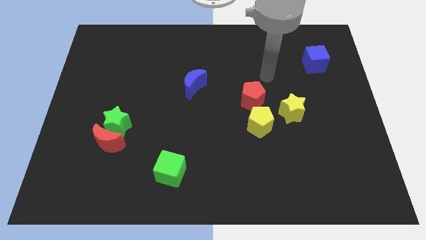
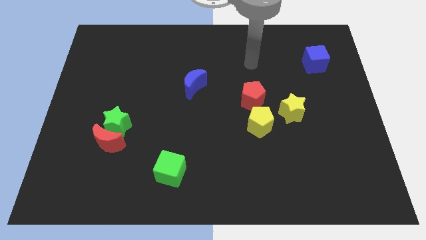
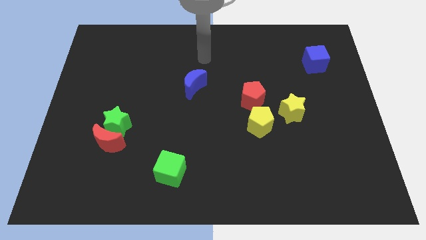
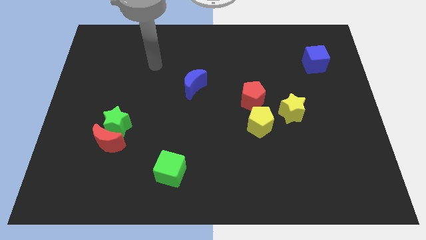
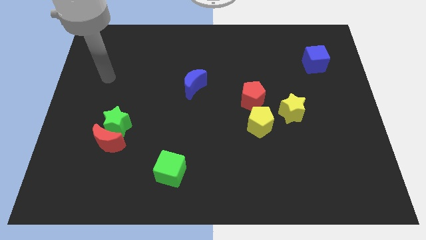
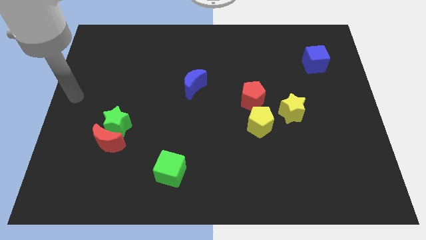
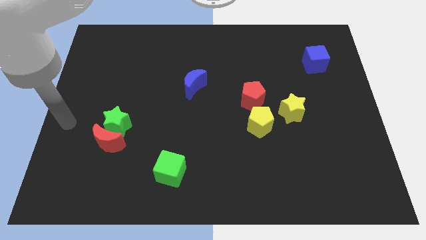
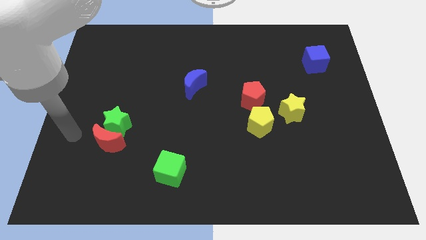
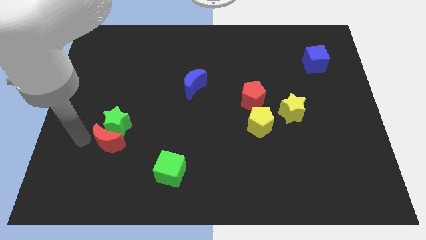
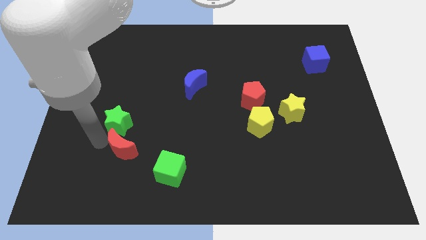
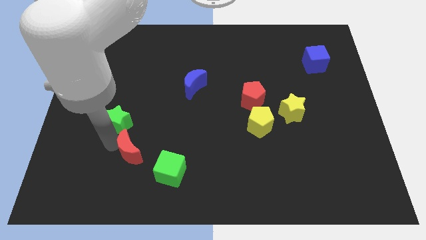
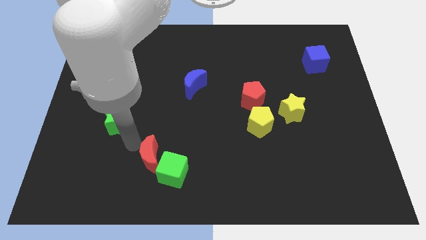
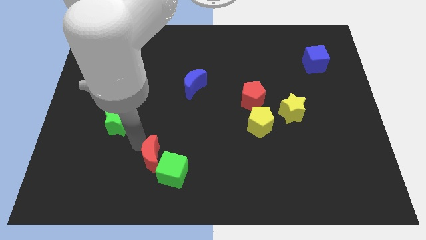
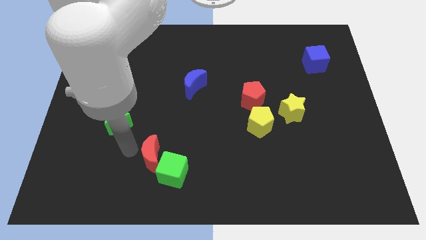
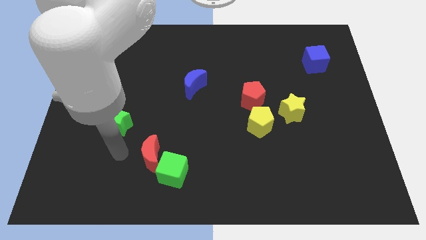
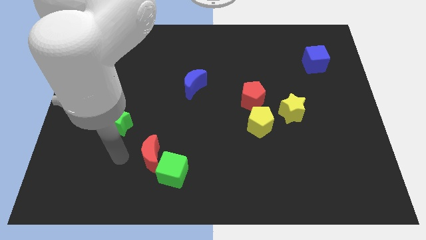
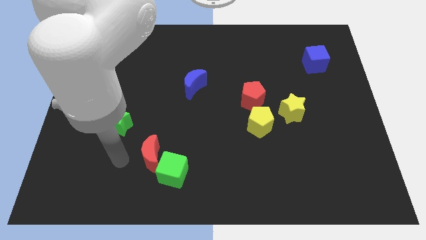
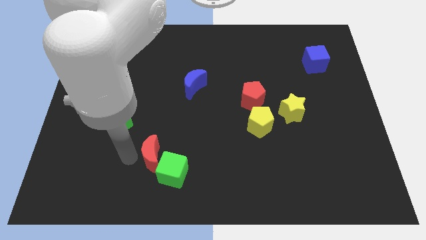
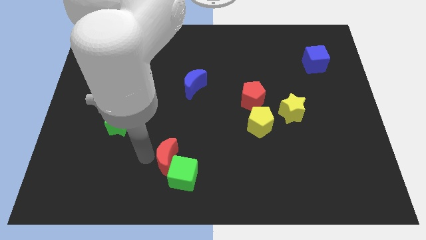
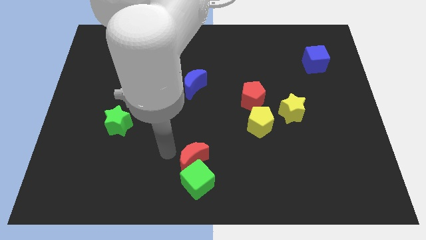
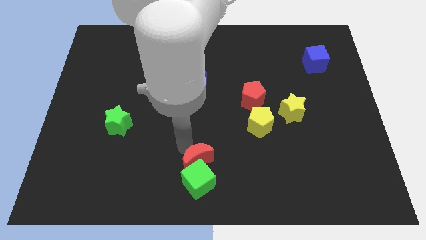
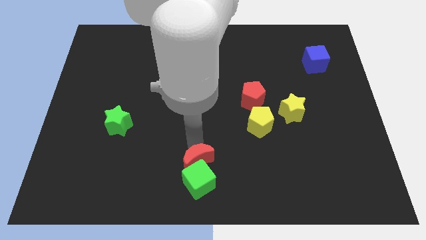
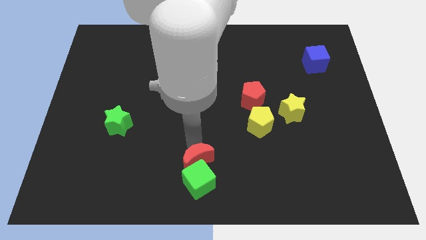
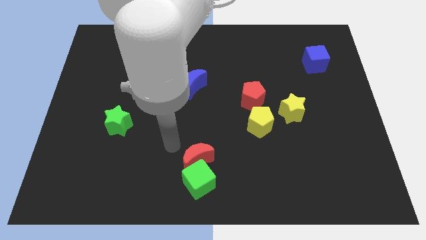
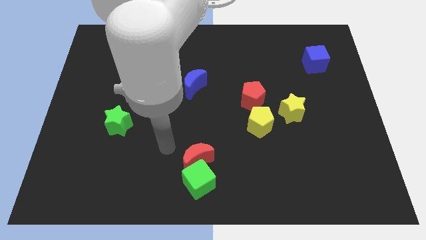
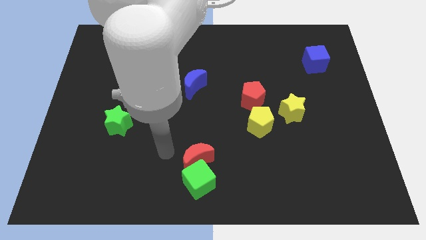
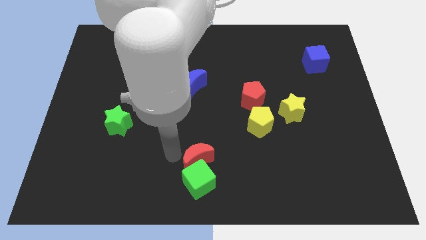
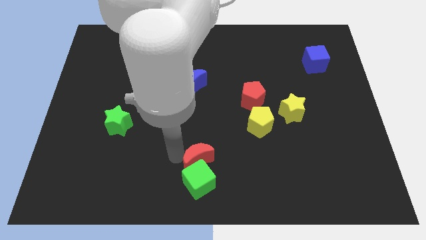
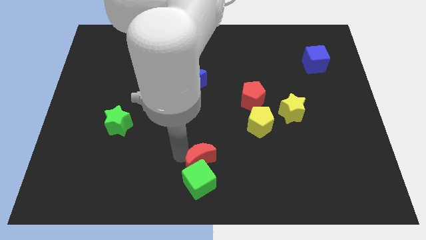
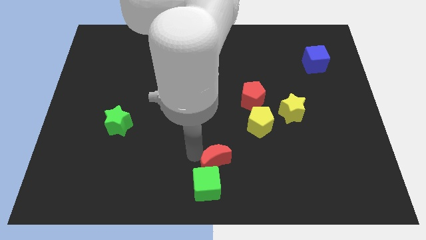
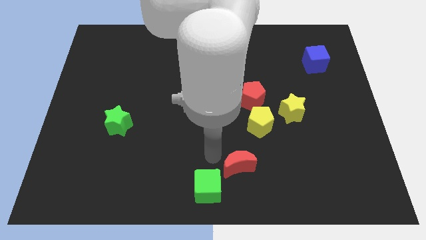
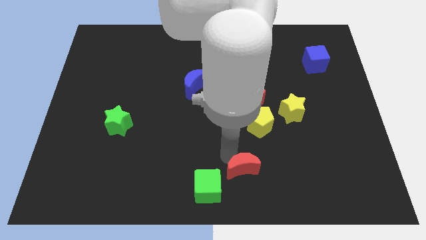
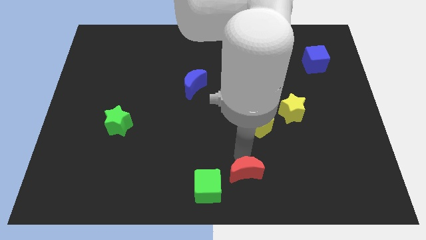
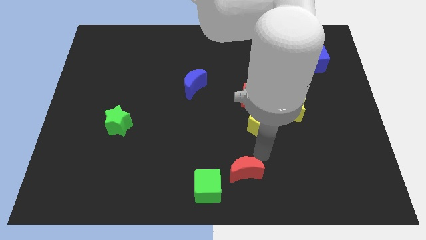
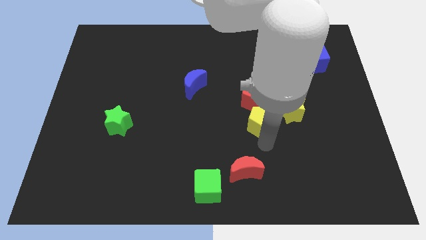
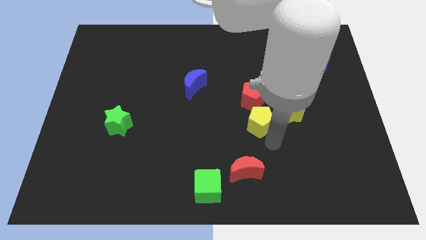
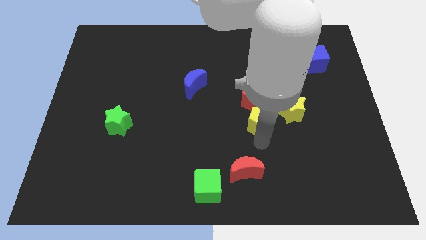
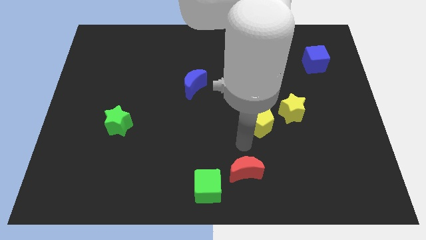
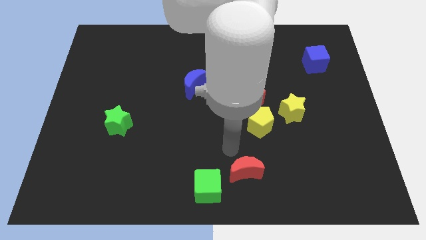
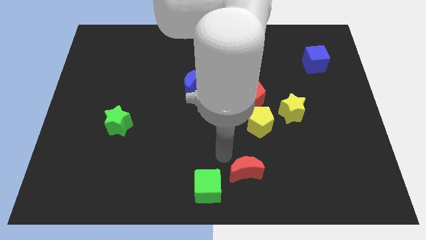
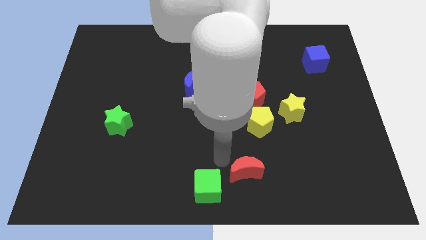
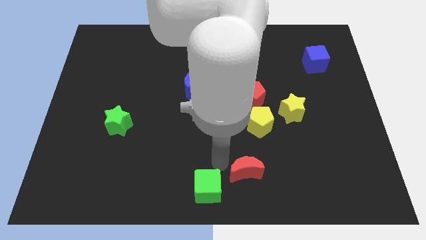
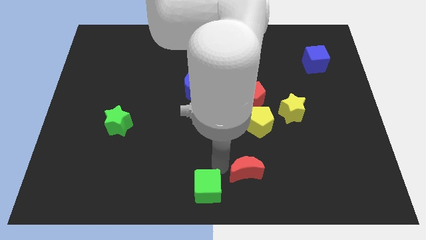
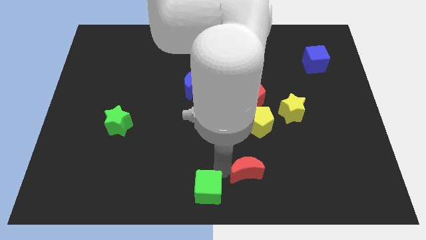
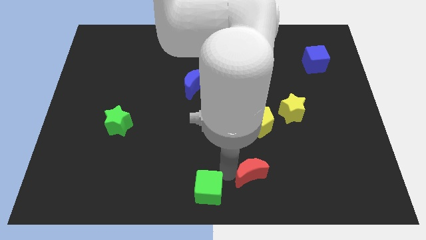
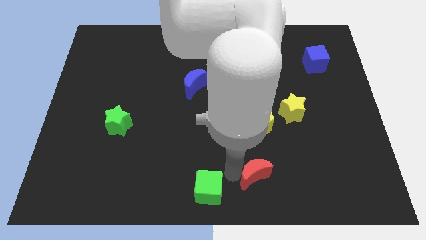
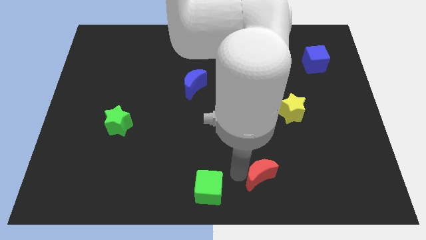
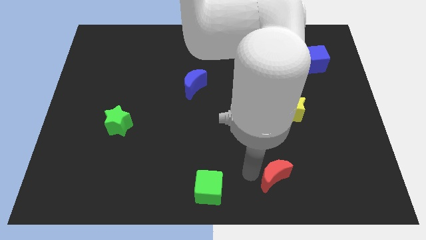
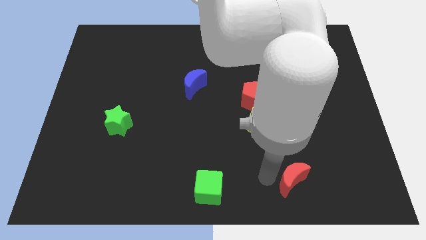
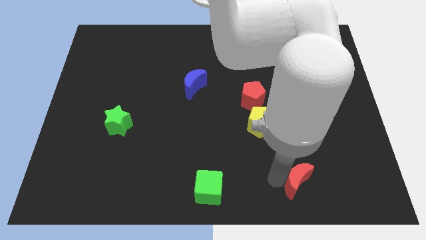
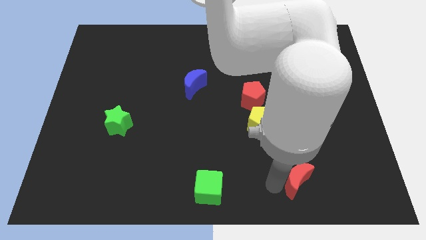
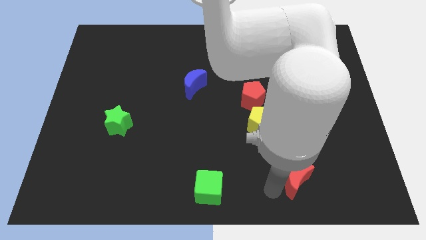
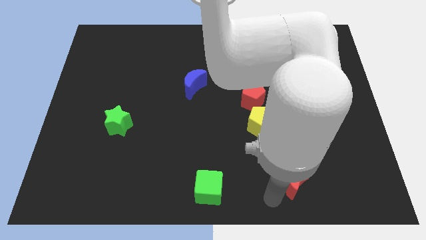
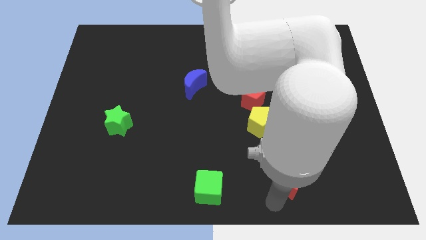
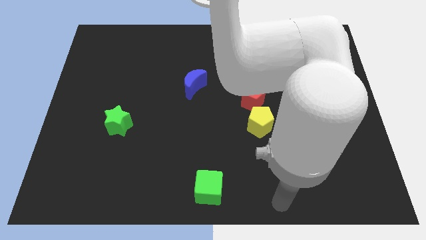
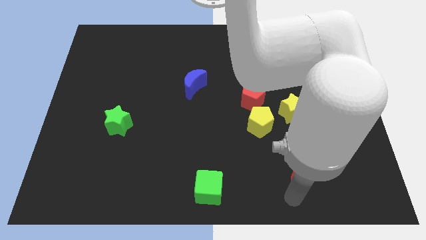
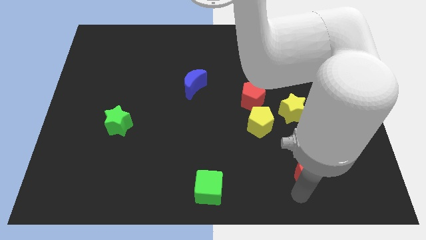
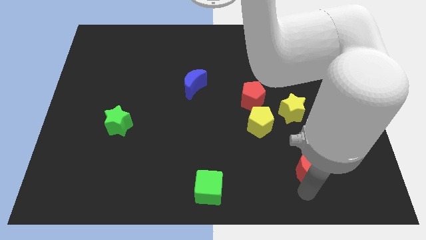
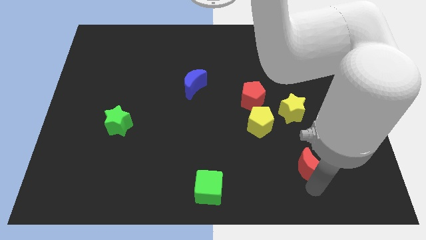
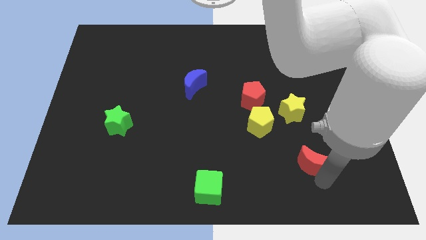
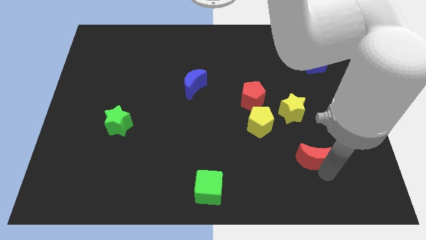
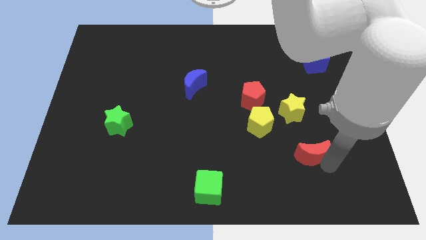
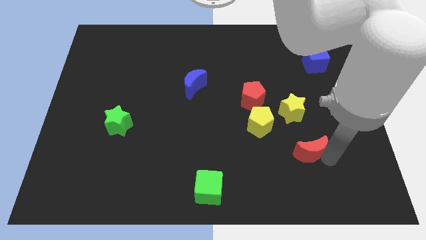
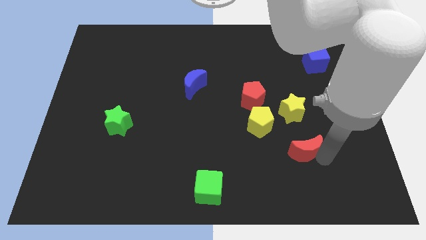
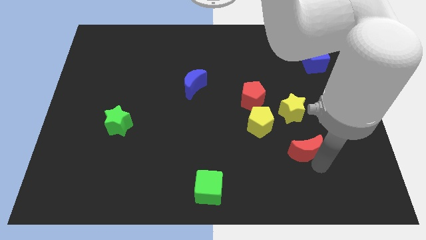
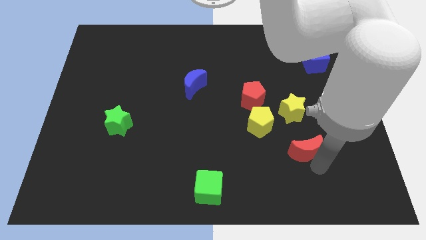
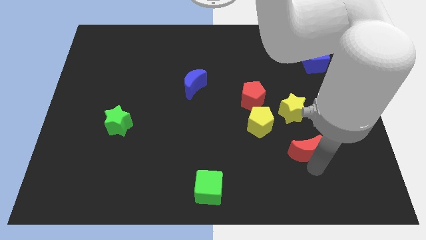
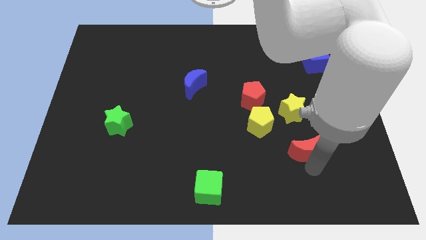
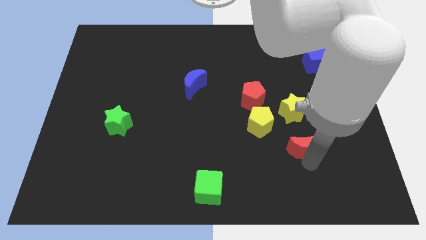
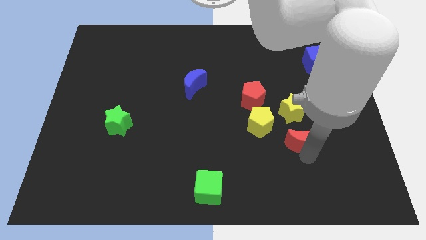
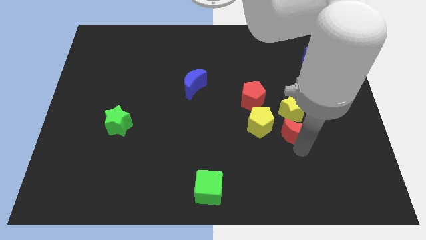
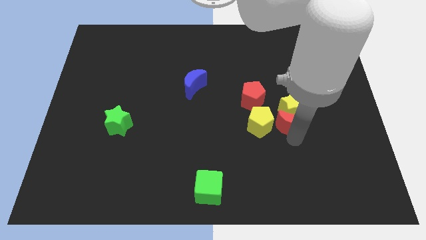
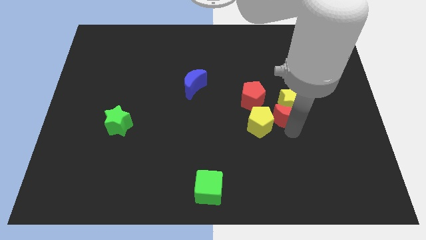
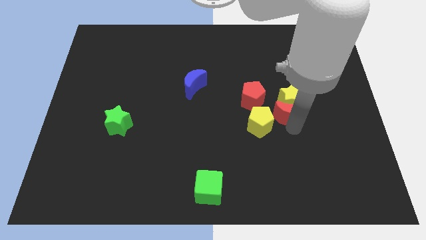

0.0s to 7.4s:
put the red moon to the yellow star

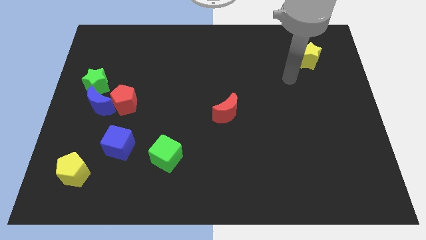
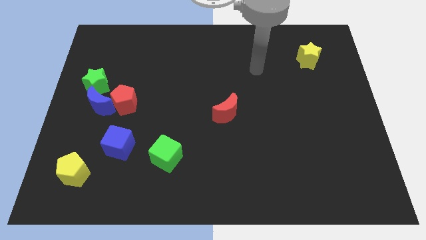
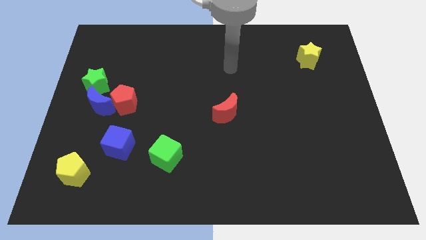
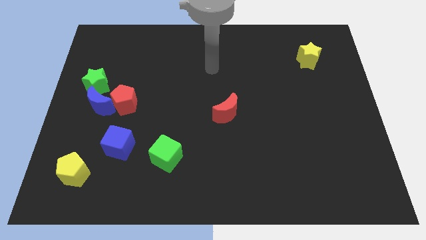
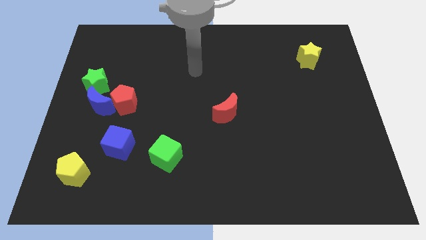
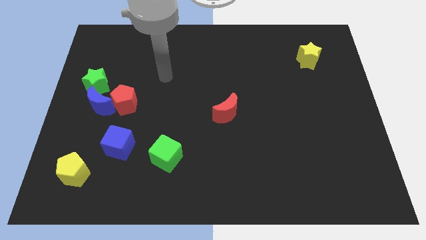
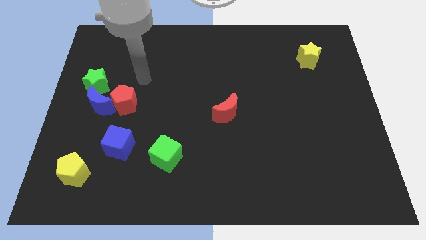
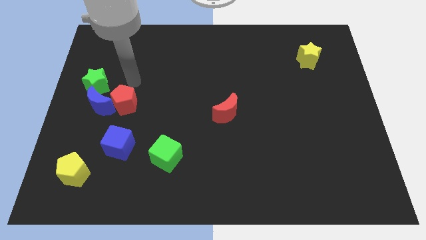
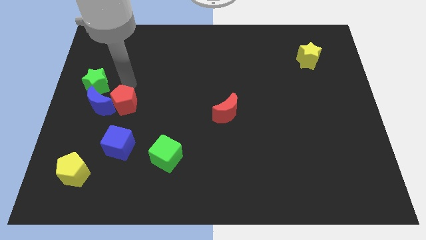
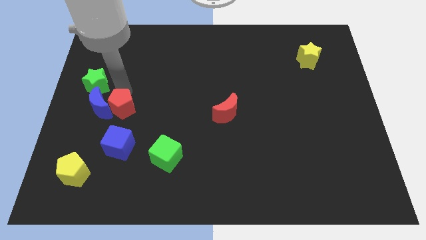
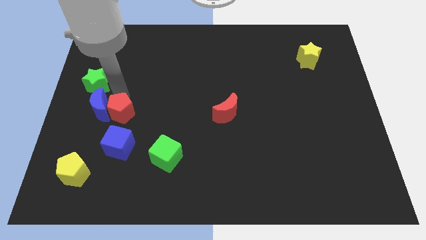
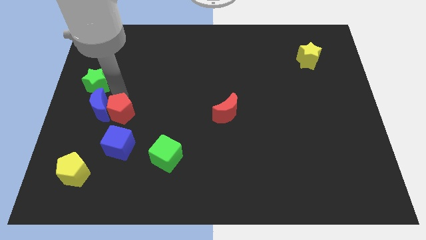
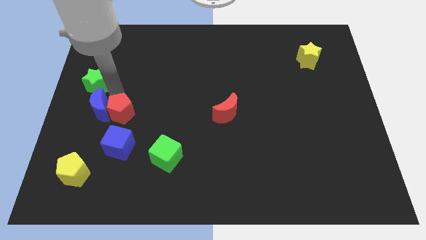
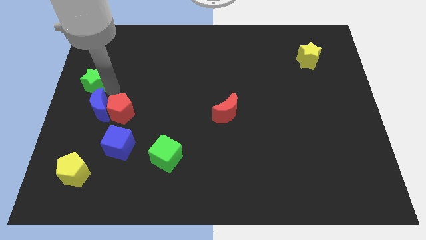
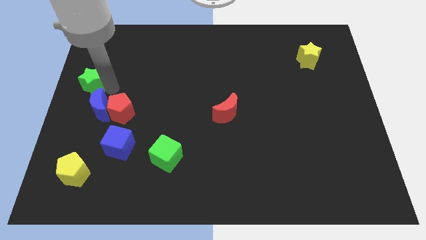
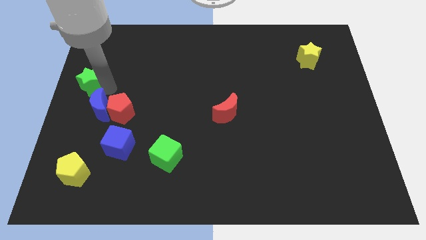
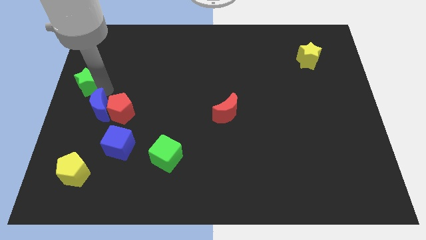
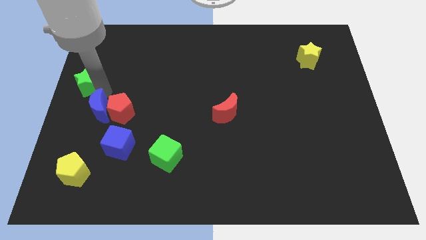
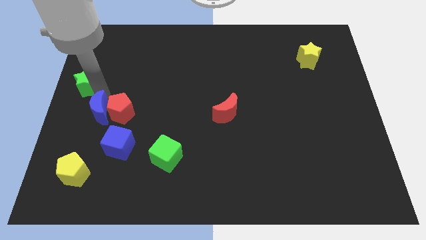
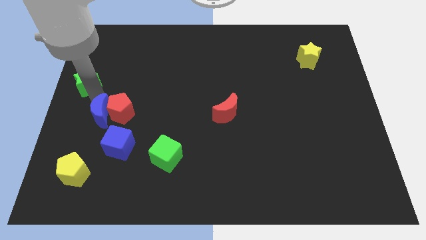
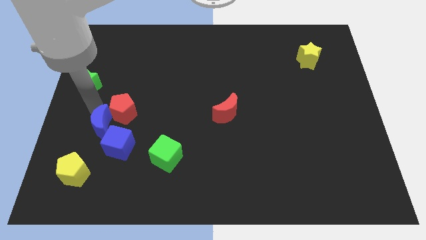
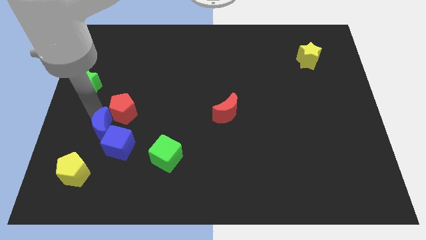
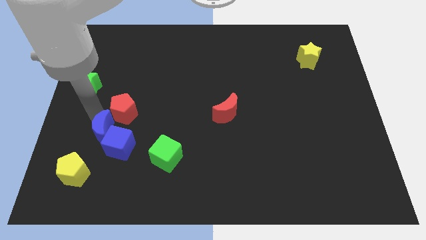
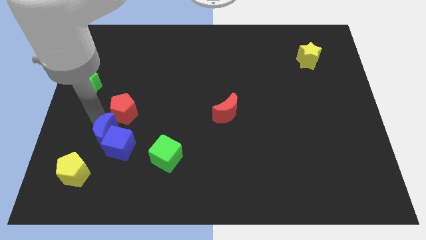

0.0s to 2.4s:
put the blue moon towards the blue cube
